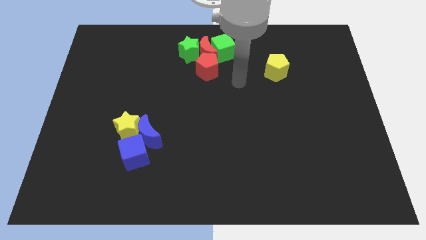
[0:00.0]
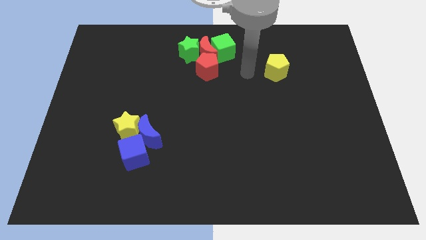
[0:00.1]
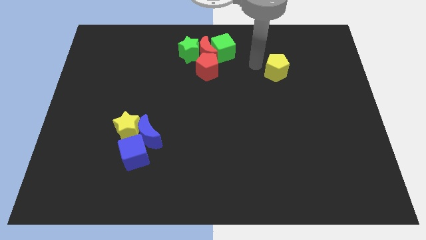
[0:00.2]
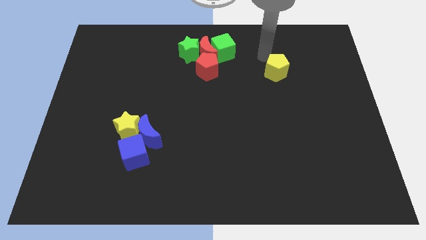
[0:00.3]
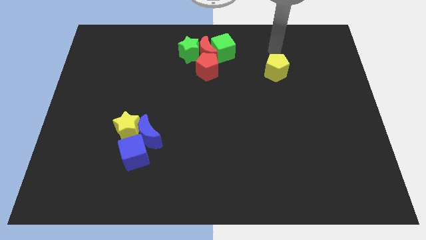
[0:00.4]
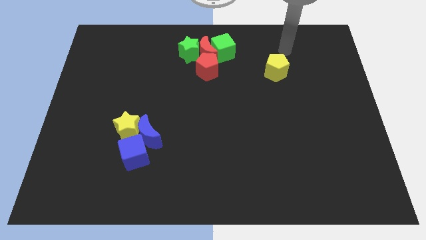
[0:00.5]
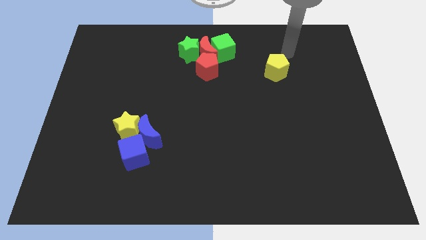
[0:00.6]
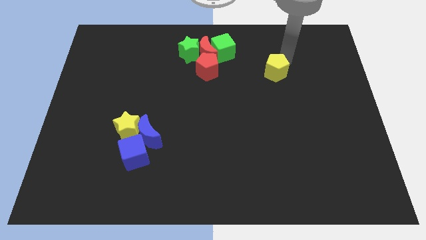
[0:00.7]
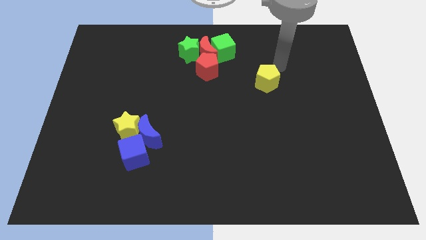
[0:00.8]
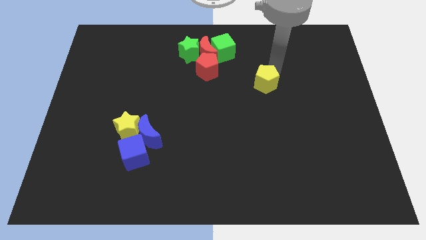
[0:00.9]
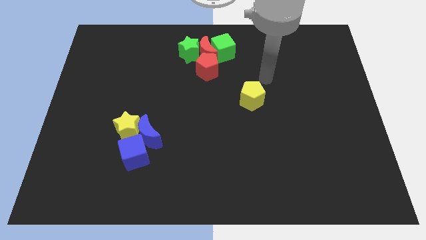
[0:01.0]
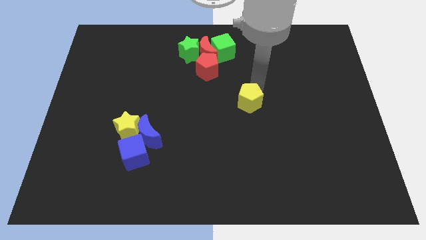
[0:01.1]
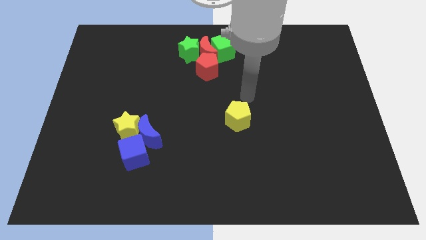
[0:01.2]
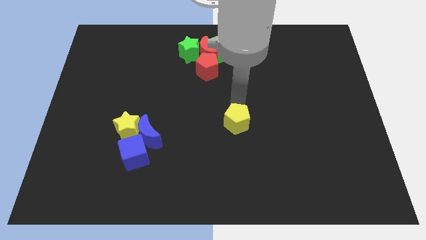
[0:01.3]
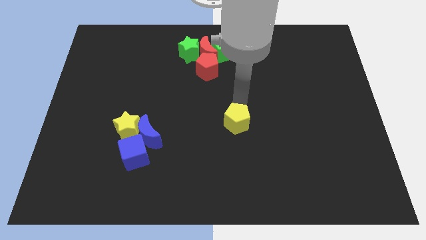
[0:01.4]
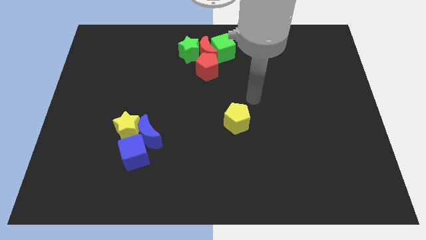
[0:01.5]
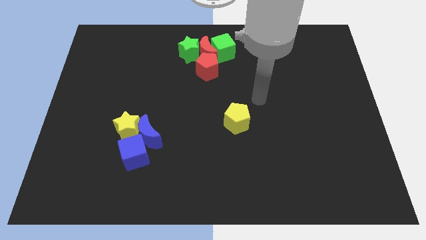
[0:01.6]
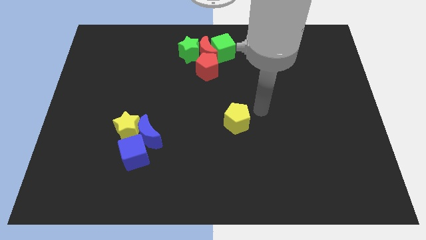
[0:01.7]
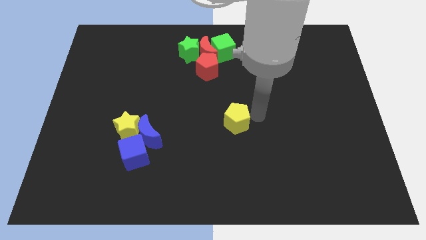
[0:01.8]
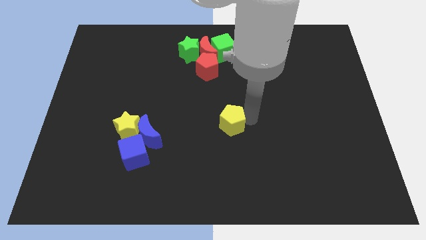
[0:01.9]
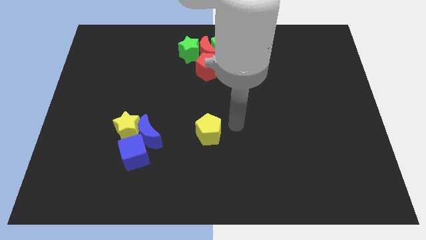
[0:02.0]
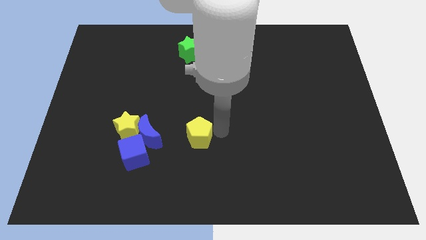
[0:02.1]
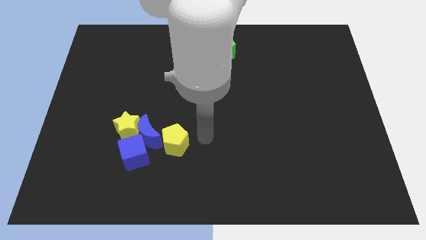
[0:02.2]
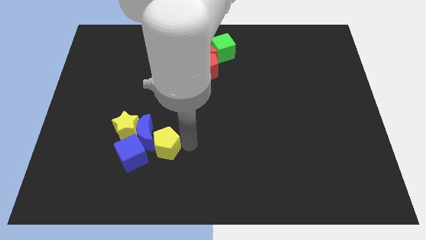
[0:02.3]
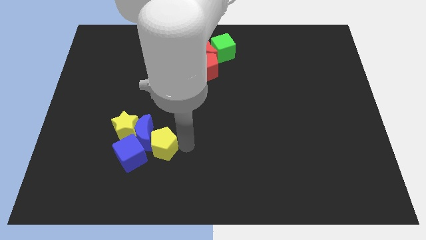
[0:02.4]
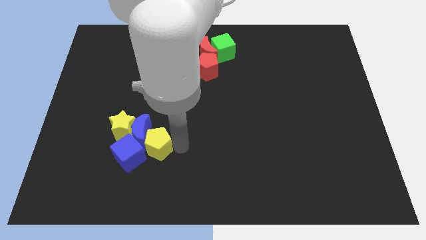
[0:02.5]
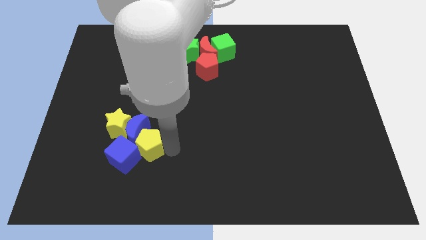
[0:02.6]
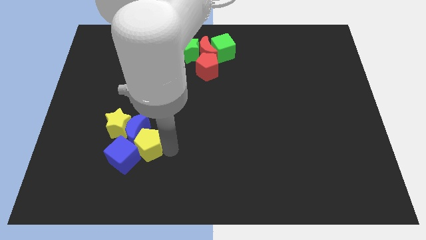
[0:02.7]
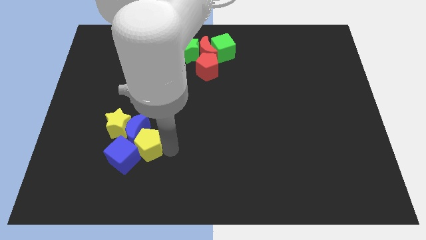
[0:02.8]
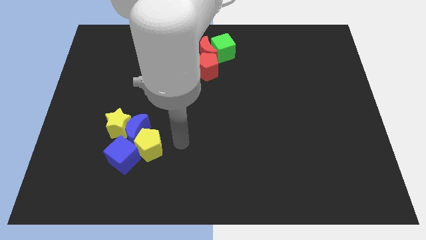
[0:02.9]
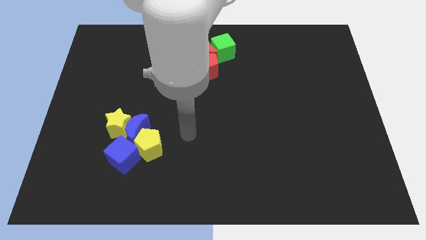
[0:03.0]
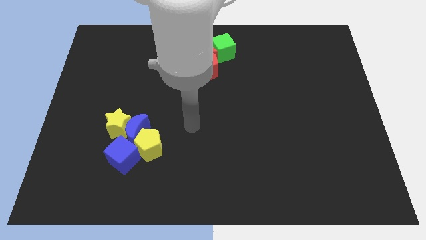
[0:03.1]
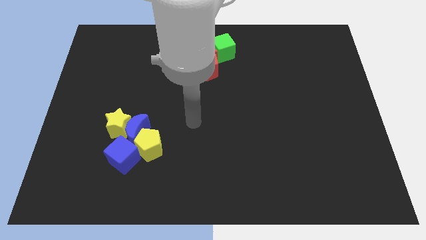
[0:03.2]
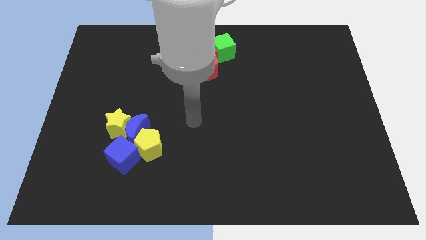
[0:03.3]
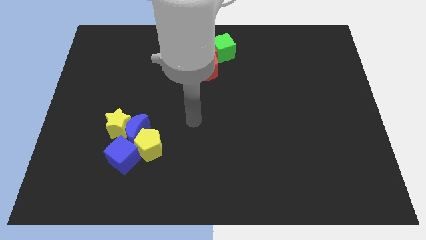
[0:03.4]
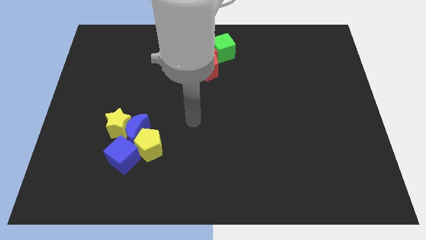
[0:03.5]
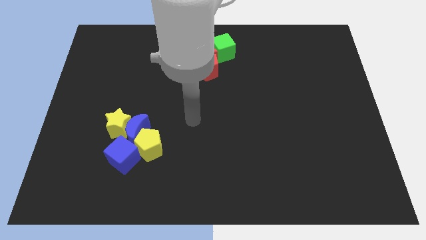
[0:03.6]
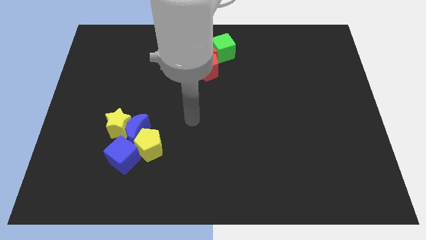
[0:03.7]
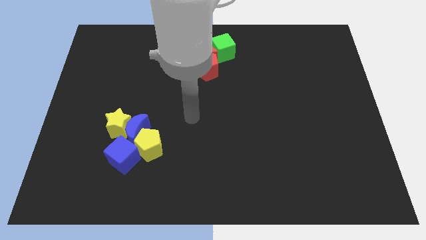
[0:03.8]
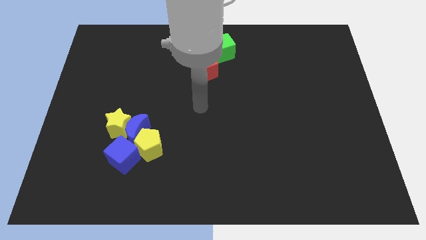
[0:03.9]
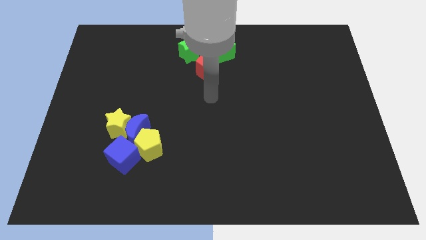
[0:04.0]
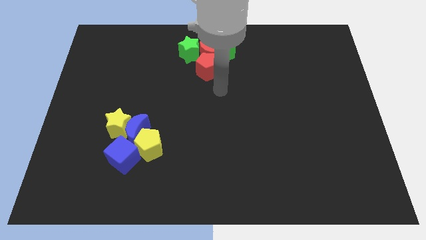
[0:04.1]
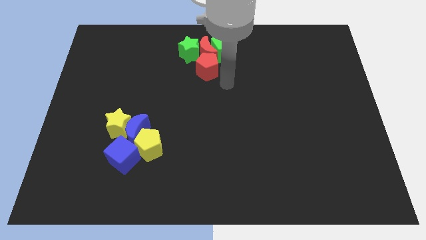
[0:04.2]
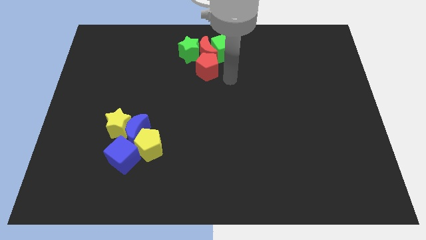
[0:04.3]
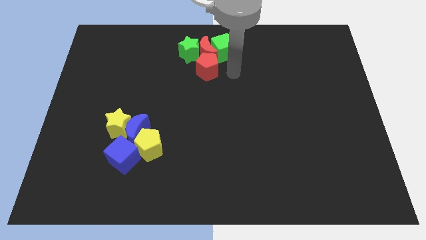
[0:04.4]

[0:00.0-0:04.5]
push the yellow pentagon into the blue moon

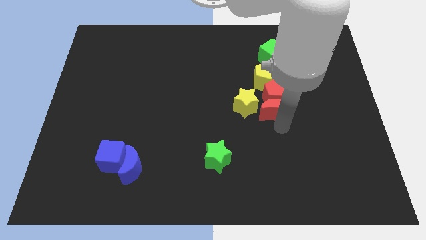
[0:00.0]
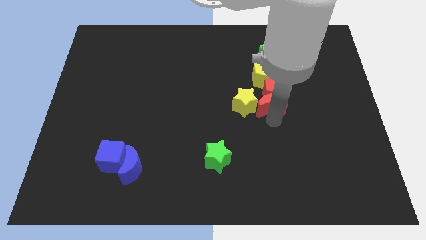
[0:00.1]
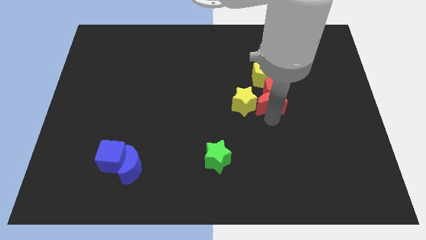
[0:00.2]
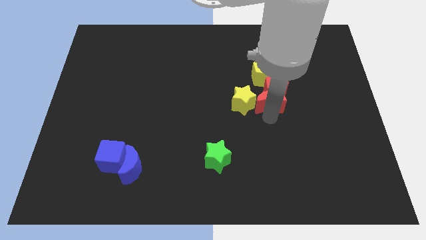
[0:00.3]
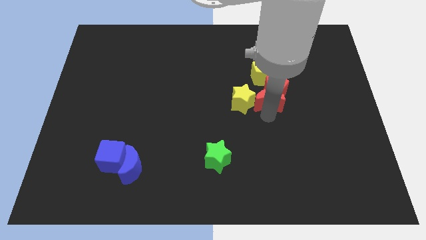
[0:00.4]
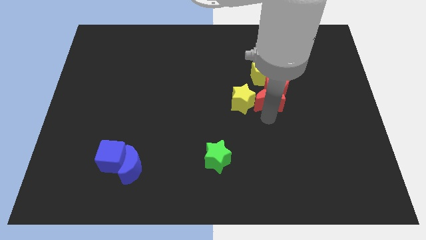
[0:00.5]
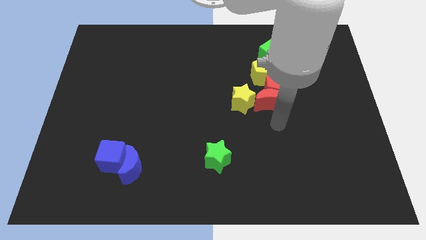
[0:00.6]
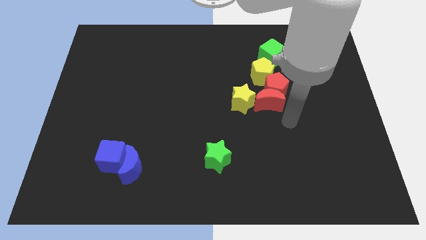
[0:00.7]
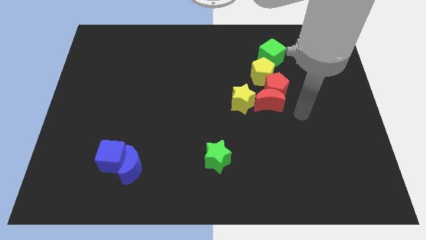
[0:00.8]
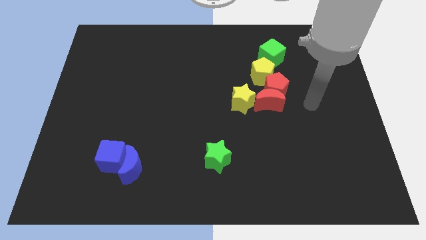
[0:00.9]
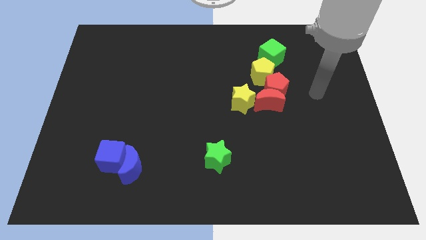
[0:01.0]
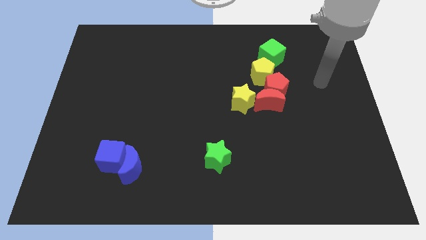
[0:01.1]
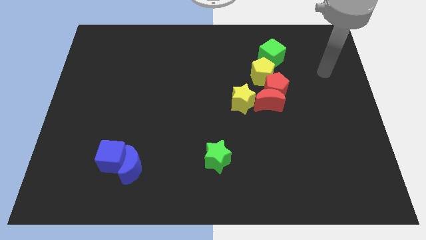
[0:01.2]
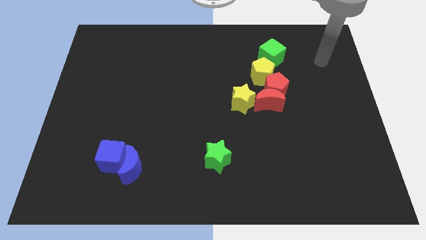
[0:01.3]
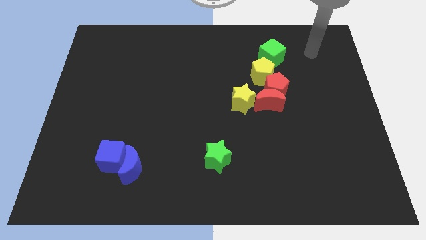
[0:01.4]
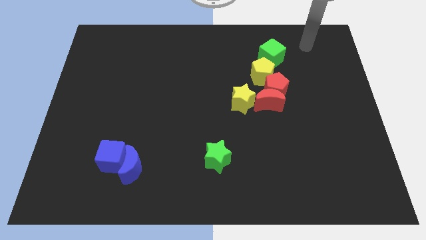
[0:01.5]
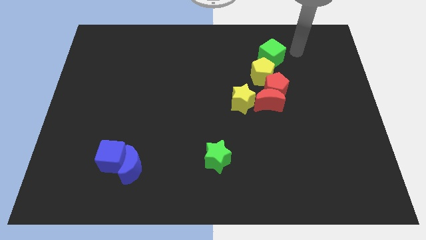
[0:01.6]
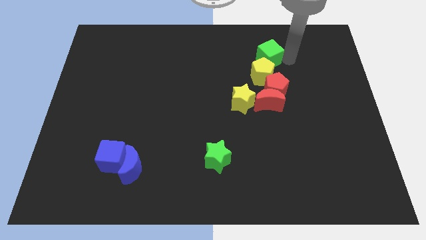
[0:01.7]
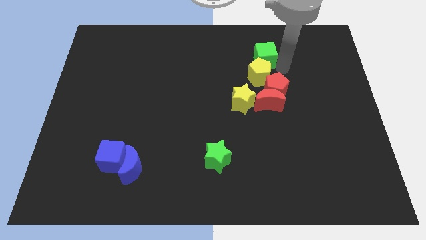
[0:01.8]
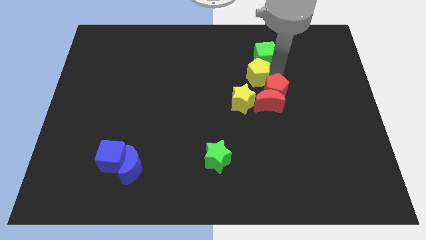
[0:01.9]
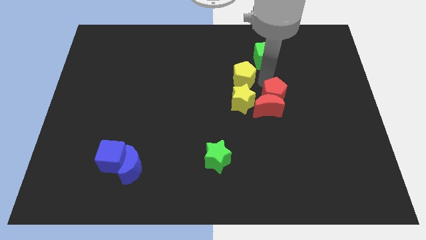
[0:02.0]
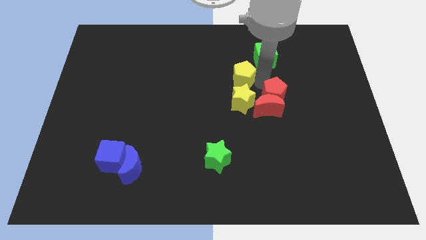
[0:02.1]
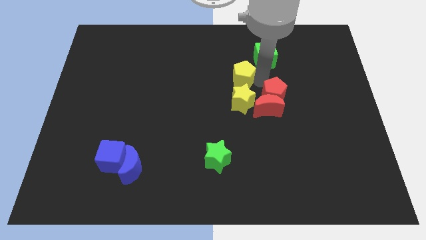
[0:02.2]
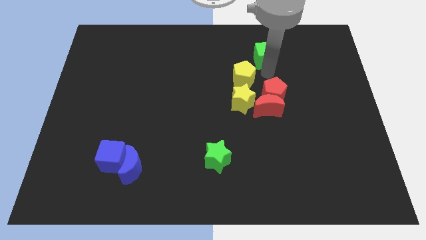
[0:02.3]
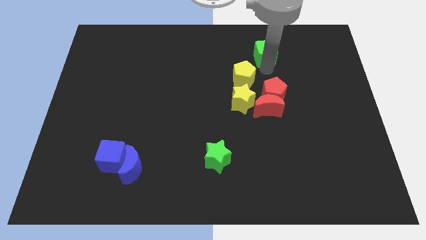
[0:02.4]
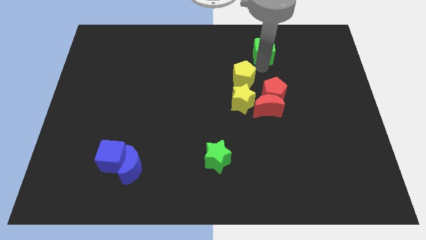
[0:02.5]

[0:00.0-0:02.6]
place yellow pentagon above yellow star

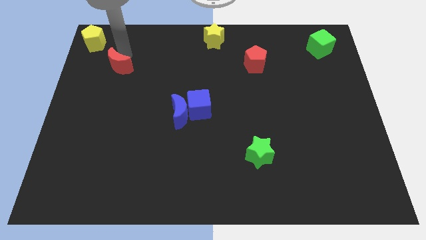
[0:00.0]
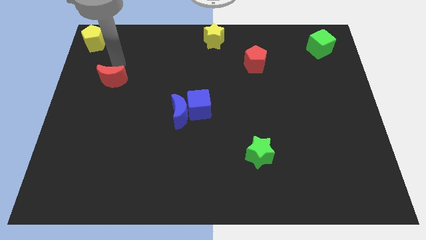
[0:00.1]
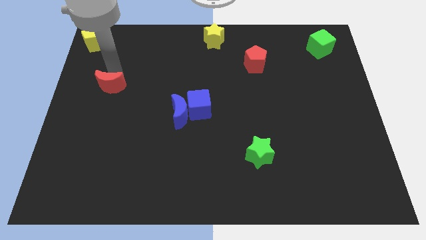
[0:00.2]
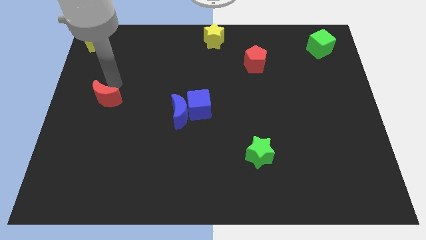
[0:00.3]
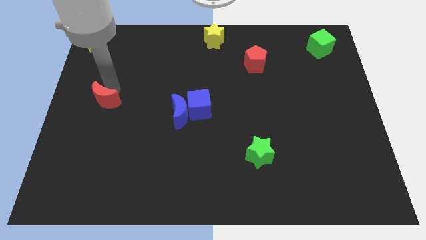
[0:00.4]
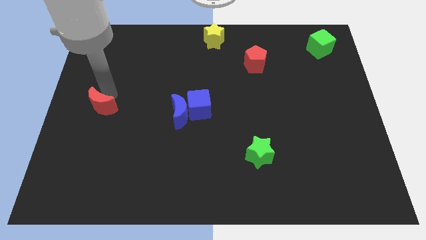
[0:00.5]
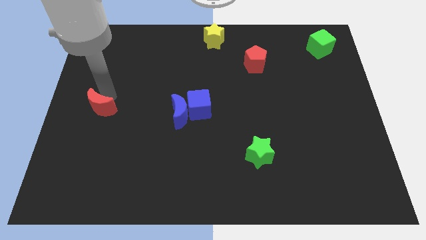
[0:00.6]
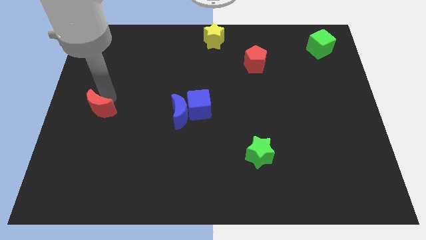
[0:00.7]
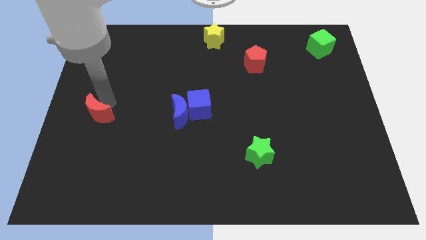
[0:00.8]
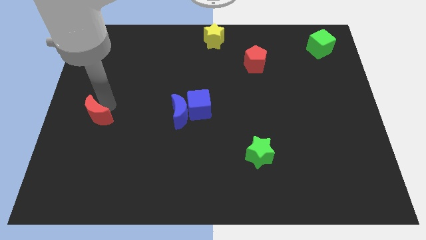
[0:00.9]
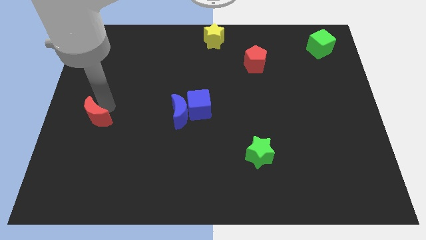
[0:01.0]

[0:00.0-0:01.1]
move the red crescent to the bottom of the board

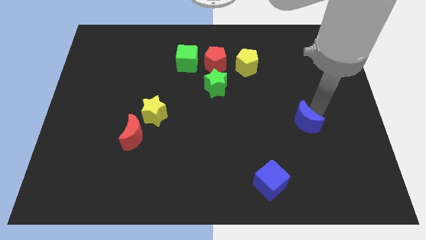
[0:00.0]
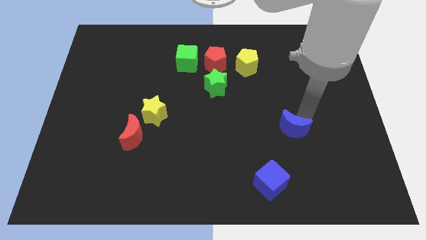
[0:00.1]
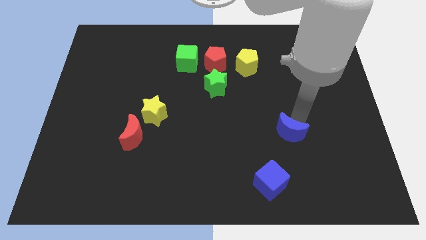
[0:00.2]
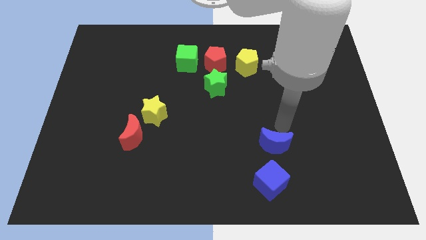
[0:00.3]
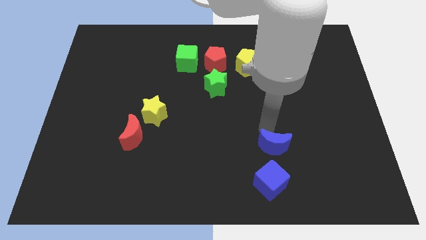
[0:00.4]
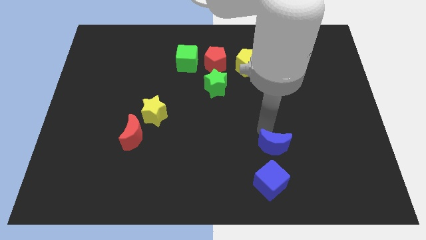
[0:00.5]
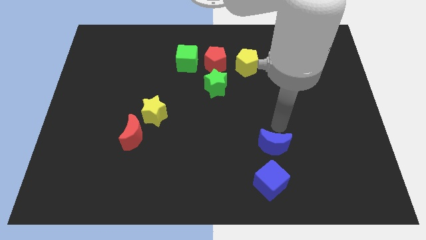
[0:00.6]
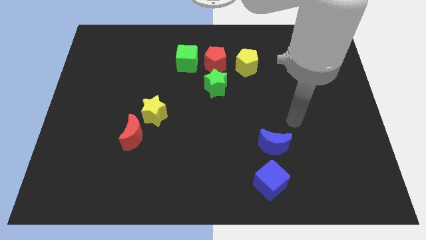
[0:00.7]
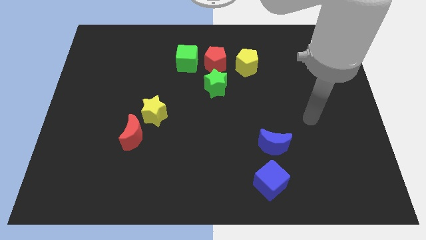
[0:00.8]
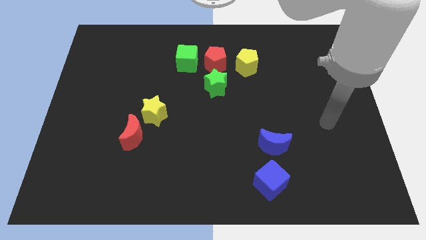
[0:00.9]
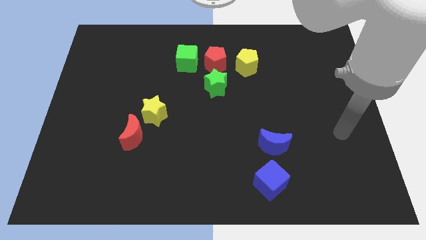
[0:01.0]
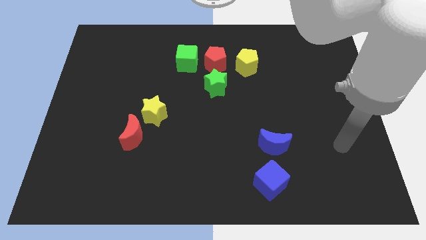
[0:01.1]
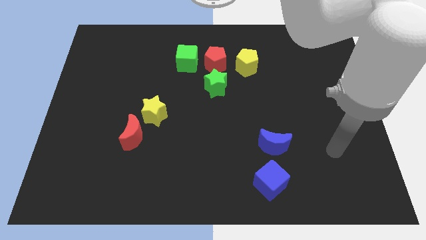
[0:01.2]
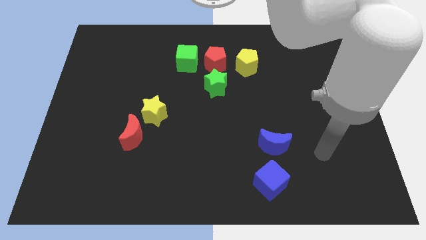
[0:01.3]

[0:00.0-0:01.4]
push blue crescent to the top of blue block
